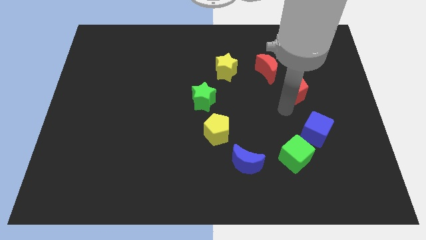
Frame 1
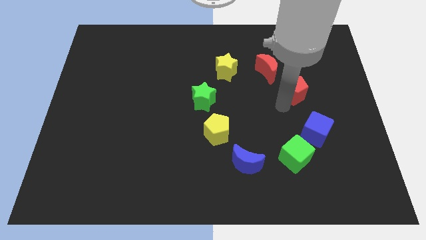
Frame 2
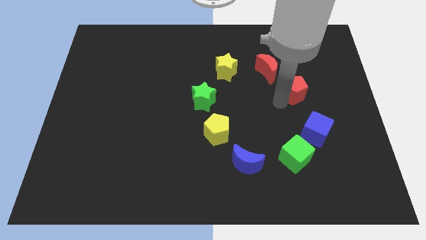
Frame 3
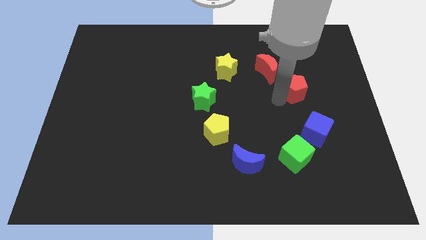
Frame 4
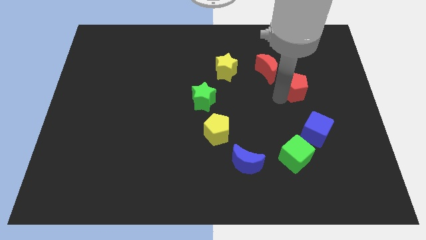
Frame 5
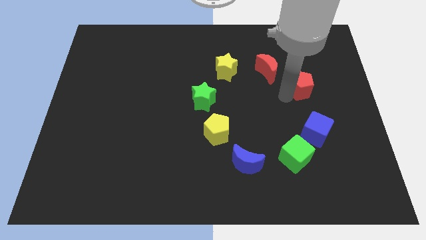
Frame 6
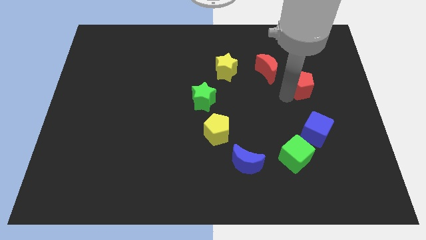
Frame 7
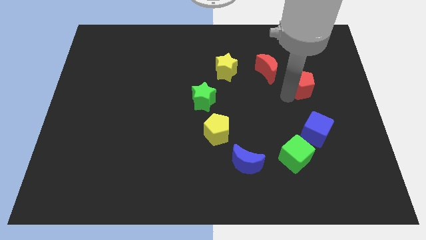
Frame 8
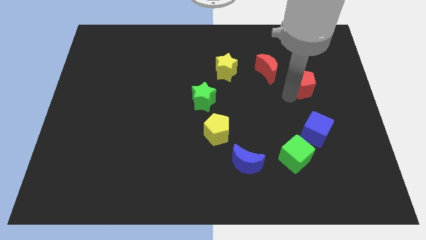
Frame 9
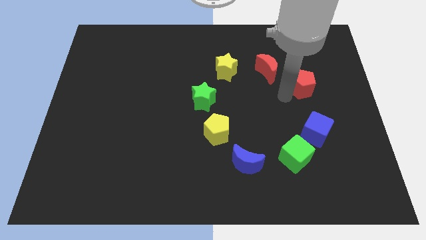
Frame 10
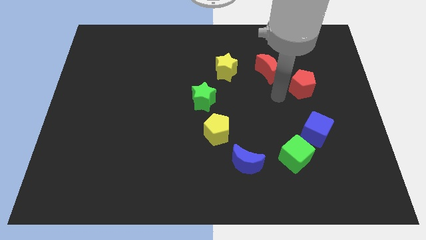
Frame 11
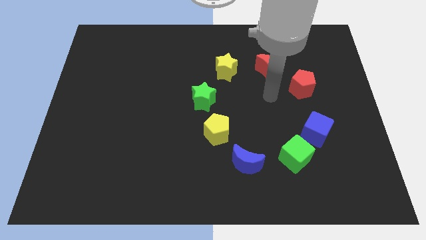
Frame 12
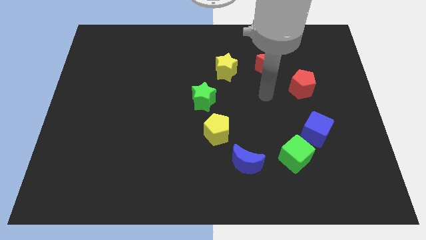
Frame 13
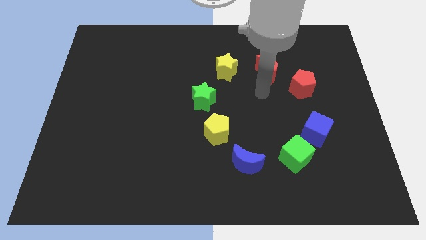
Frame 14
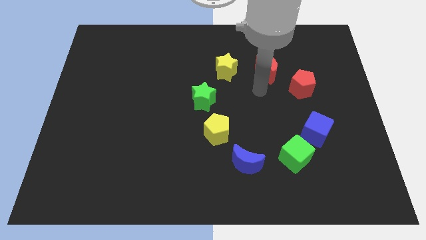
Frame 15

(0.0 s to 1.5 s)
push the red pentagon slightly to the right of the board

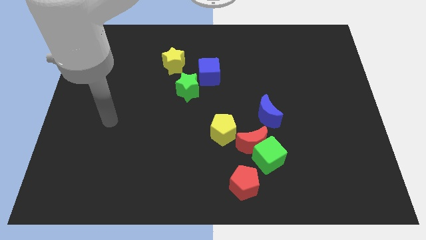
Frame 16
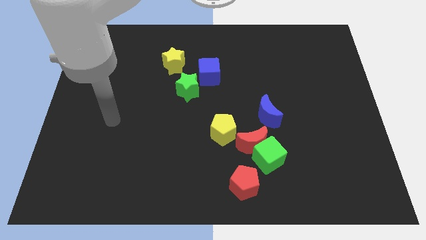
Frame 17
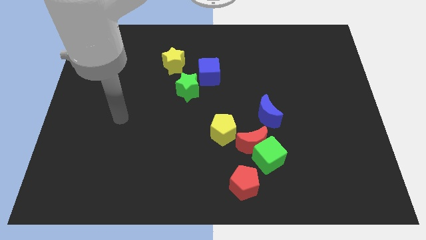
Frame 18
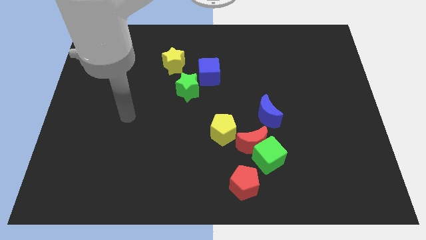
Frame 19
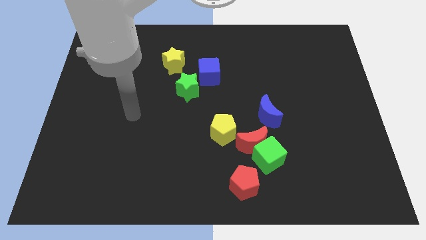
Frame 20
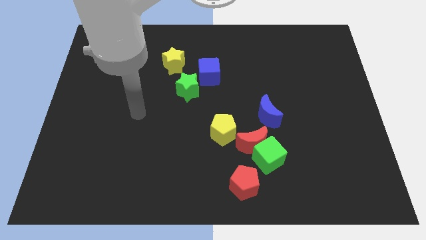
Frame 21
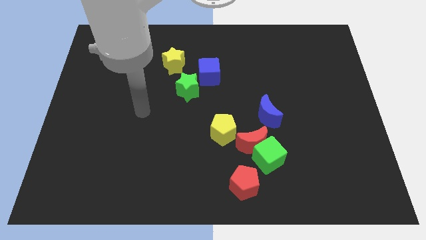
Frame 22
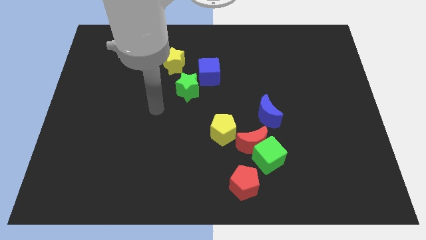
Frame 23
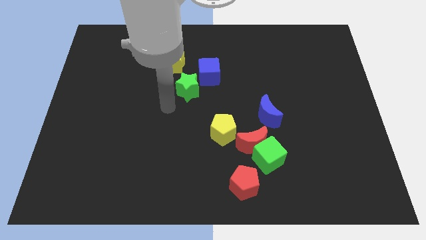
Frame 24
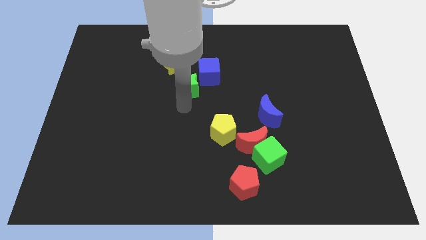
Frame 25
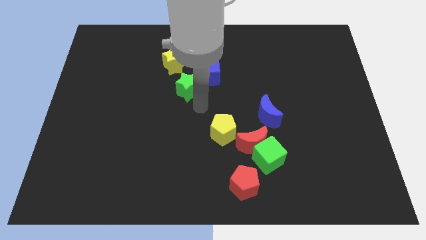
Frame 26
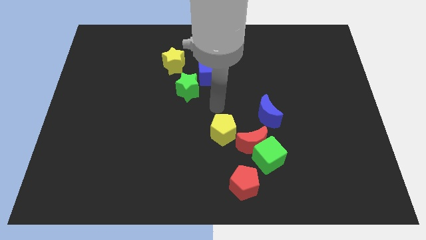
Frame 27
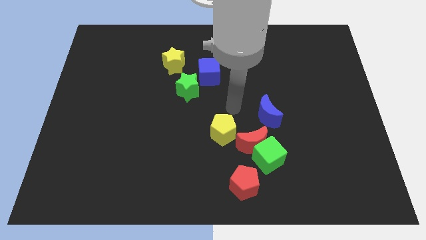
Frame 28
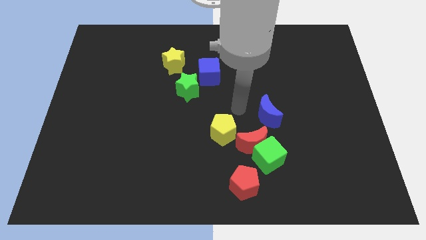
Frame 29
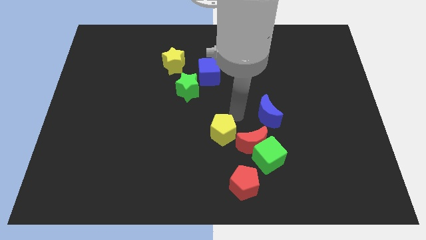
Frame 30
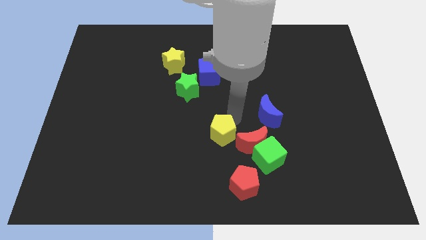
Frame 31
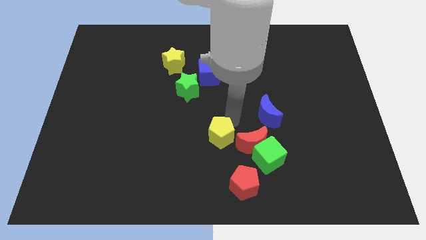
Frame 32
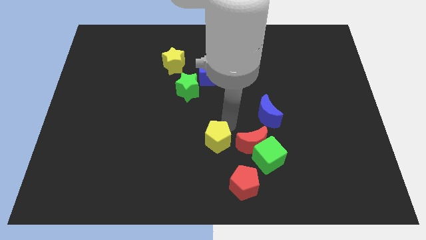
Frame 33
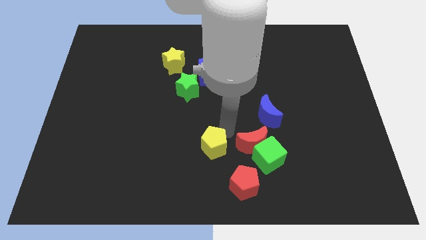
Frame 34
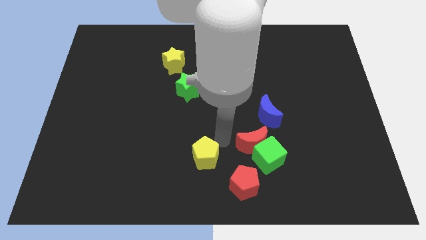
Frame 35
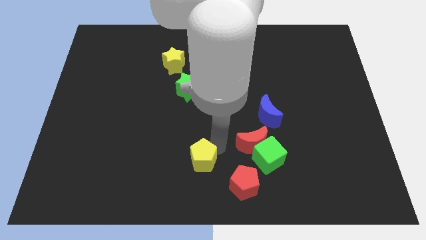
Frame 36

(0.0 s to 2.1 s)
separate the yellow pentagon from the red moon

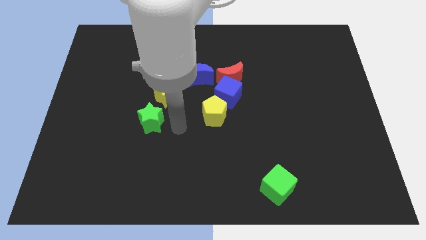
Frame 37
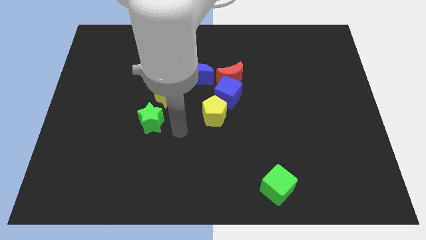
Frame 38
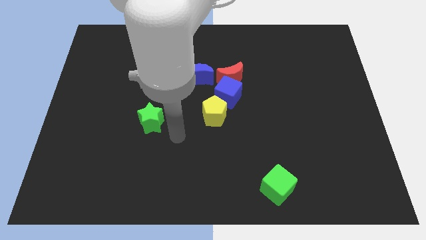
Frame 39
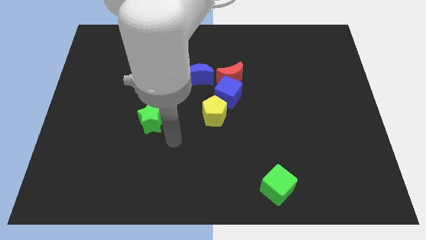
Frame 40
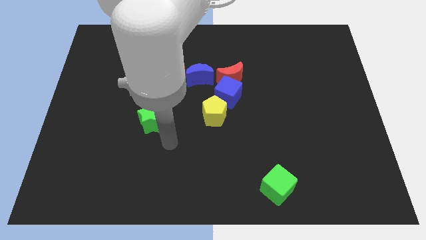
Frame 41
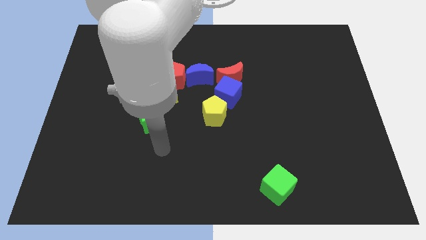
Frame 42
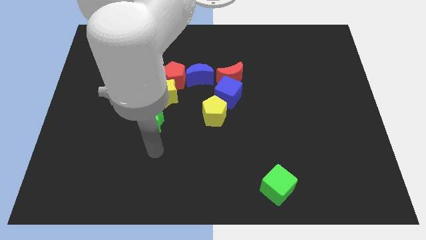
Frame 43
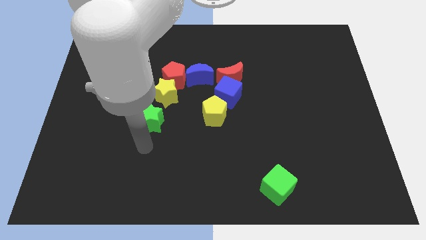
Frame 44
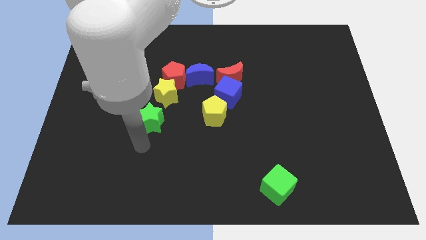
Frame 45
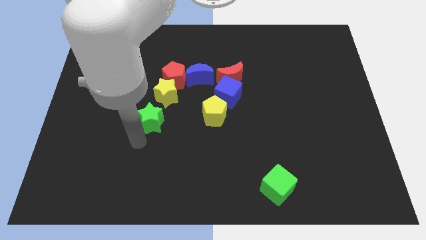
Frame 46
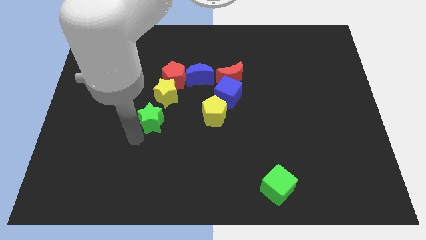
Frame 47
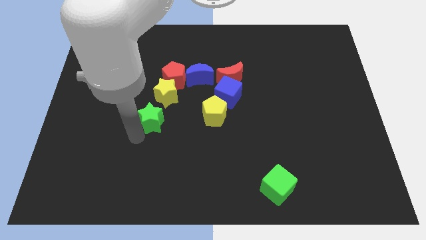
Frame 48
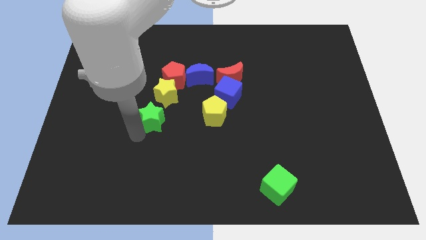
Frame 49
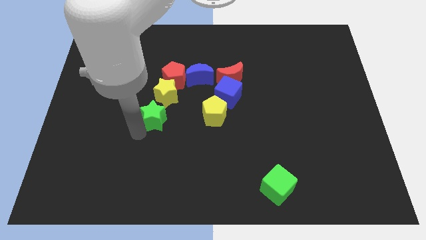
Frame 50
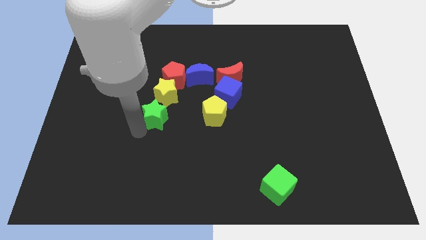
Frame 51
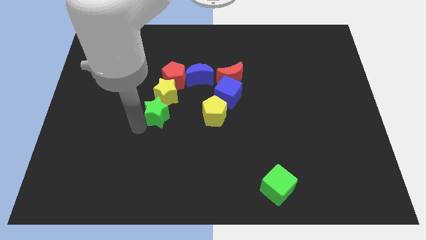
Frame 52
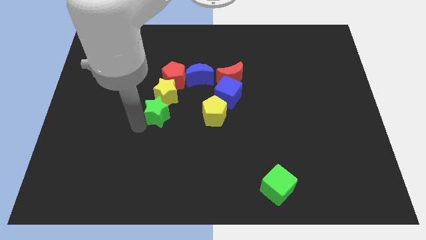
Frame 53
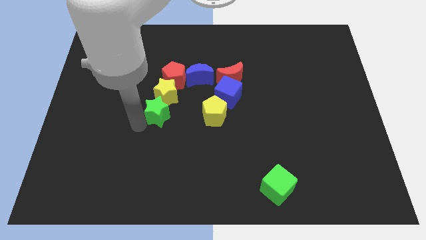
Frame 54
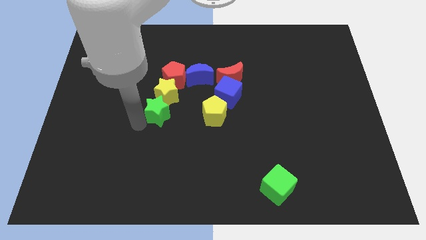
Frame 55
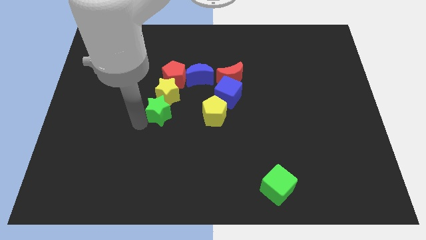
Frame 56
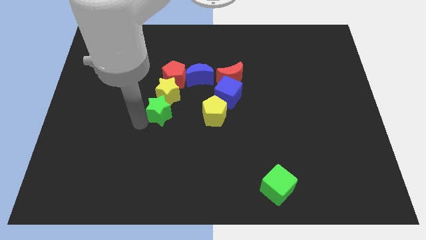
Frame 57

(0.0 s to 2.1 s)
push the green star to the bottom of the yellow star

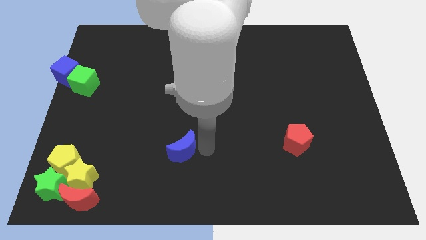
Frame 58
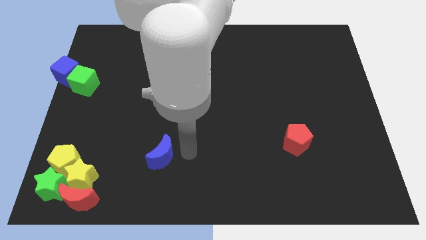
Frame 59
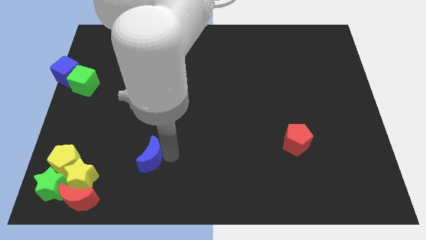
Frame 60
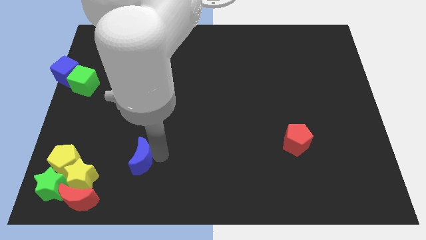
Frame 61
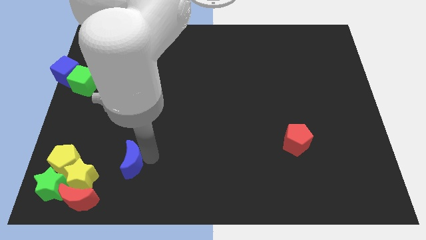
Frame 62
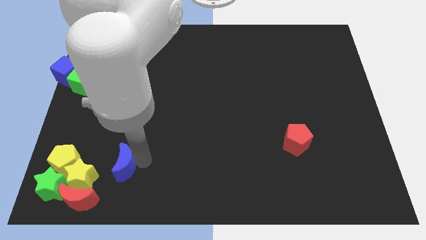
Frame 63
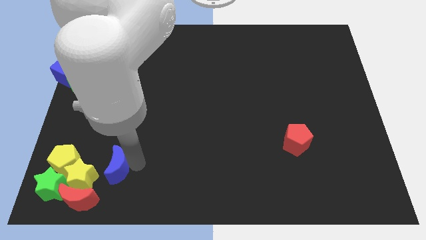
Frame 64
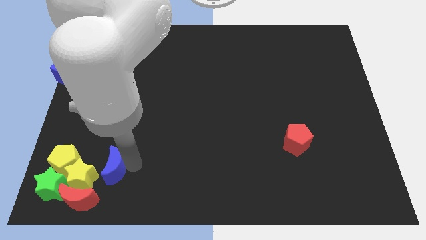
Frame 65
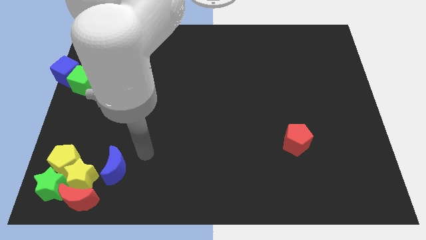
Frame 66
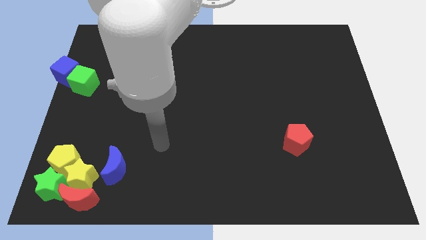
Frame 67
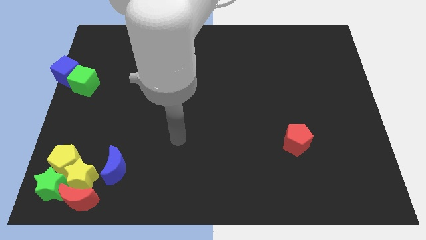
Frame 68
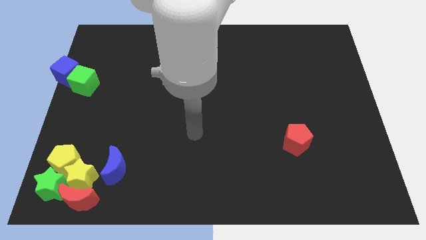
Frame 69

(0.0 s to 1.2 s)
move the blue crescent towards the yellow star

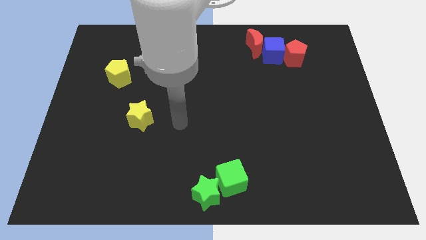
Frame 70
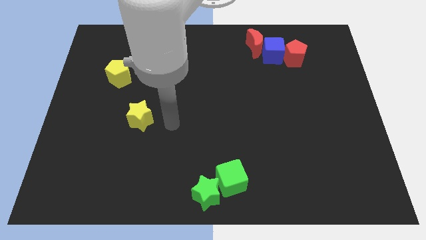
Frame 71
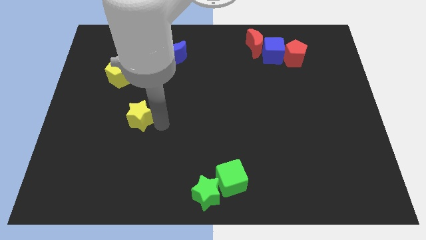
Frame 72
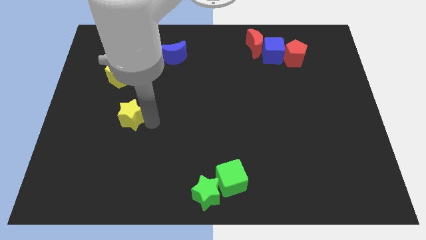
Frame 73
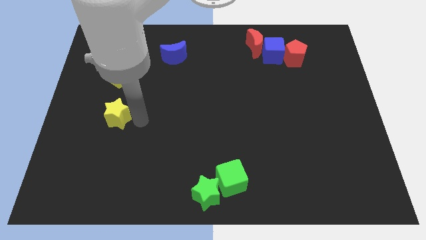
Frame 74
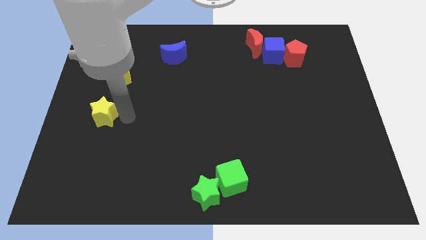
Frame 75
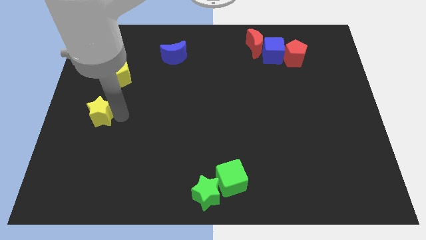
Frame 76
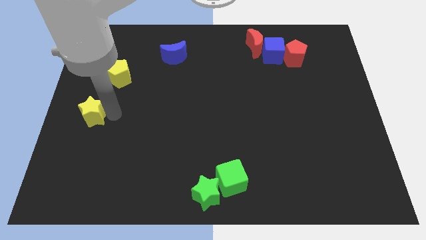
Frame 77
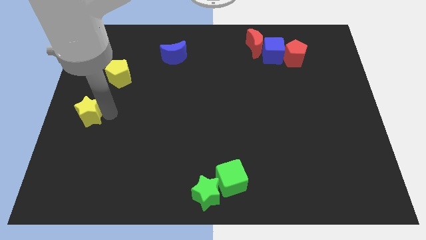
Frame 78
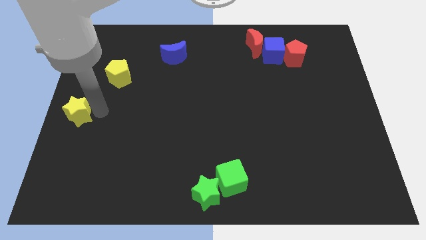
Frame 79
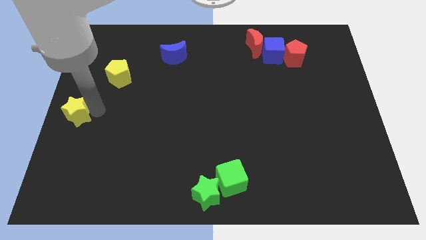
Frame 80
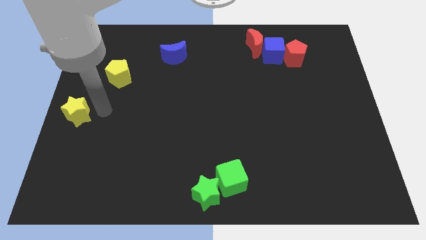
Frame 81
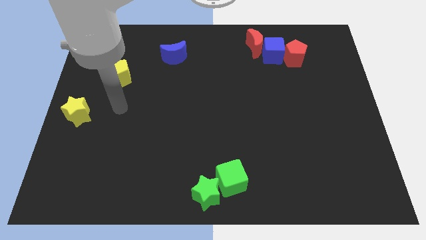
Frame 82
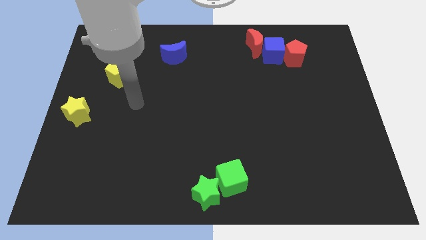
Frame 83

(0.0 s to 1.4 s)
place the yellow star at the center left of the board

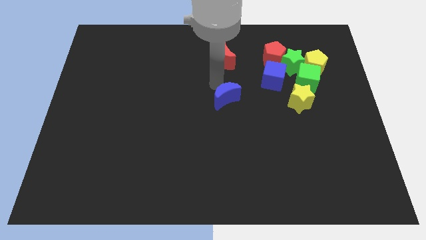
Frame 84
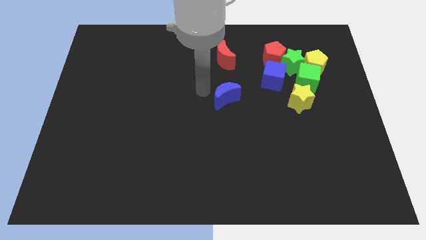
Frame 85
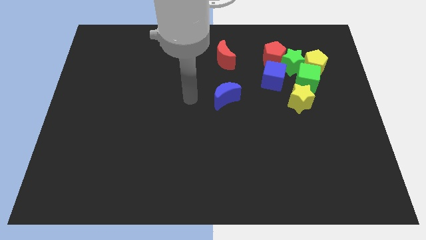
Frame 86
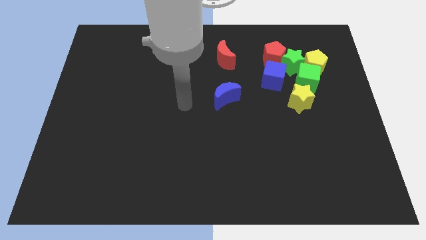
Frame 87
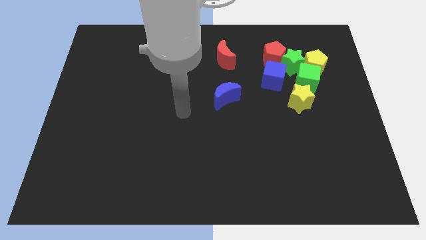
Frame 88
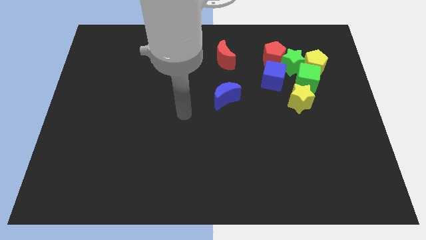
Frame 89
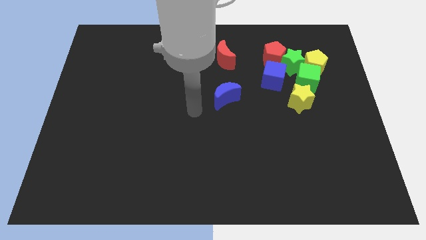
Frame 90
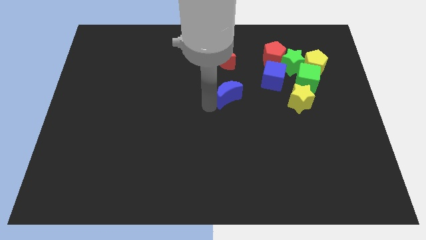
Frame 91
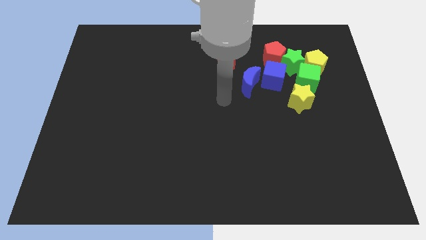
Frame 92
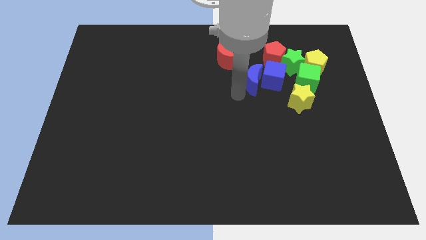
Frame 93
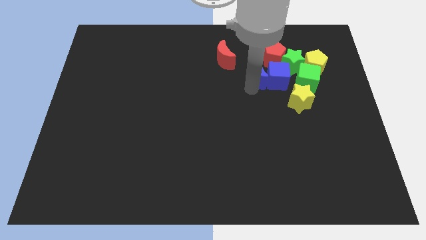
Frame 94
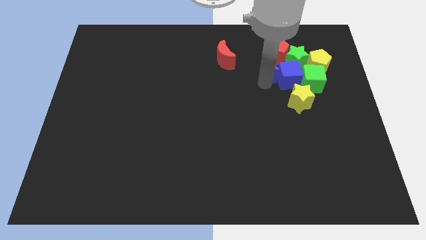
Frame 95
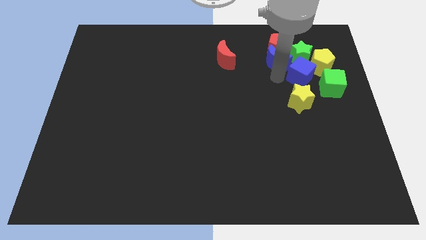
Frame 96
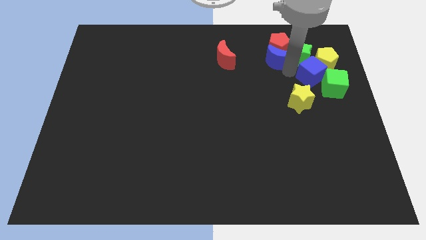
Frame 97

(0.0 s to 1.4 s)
move the blue moon into the remaining group of blocks
